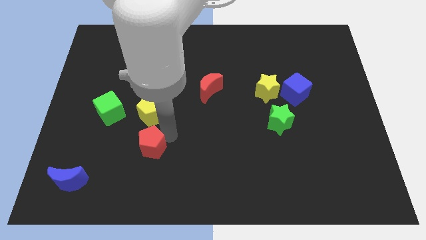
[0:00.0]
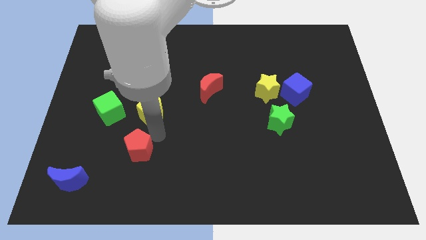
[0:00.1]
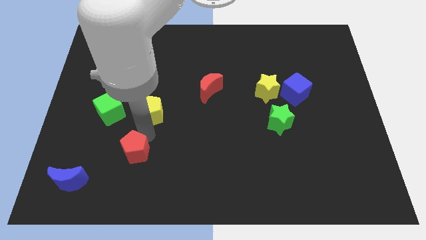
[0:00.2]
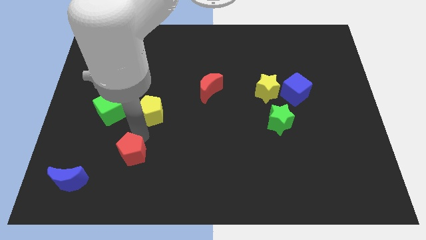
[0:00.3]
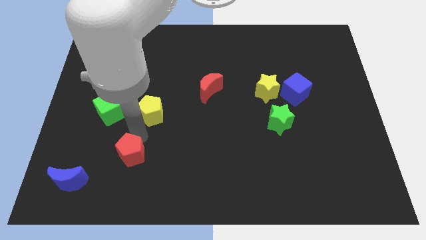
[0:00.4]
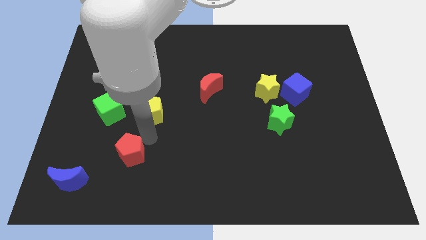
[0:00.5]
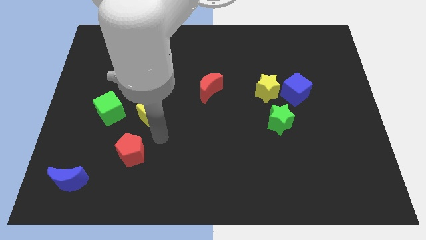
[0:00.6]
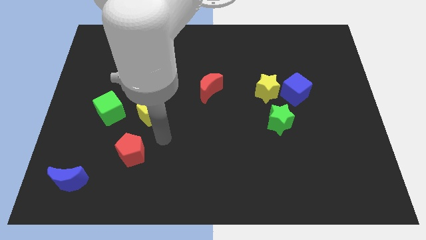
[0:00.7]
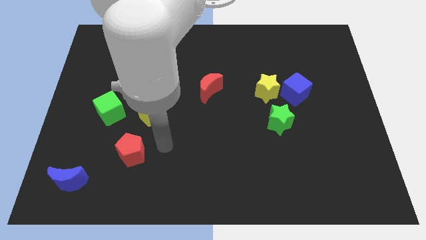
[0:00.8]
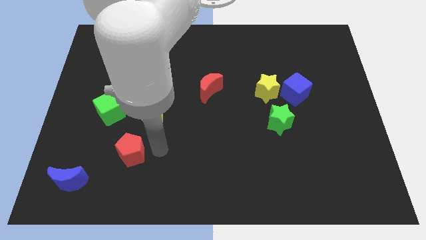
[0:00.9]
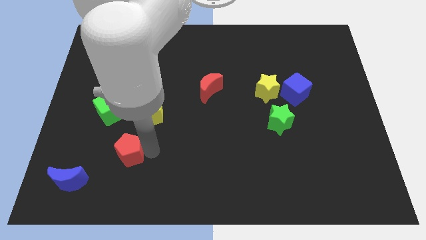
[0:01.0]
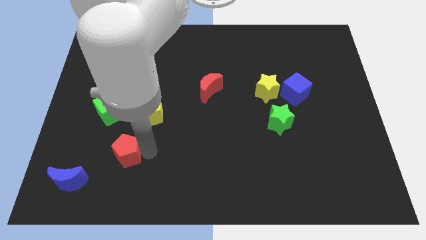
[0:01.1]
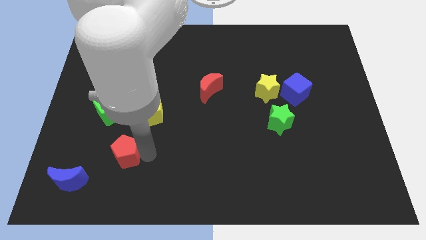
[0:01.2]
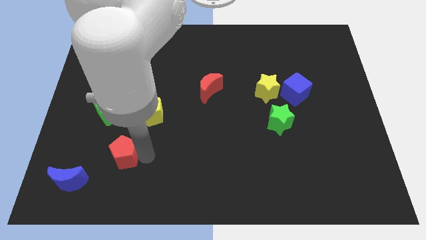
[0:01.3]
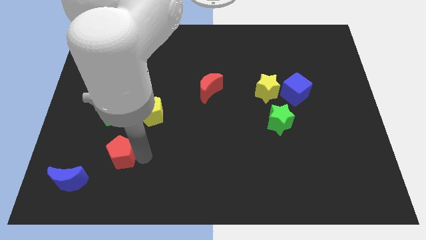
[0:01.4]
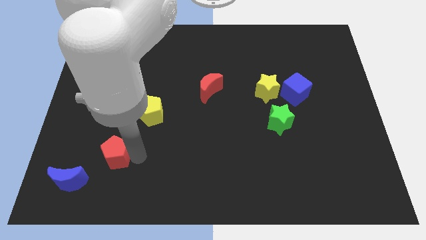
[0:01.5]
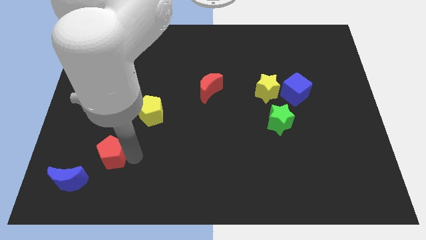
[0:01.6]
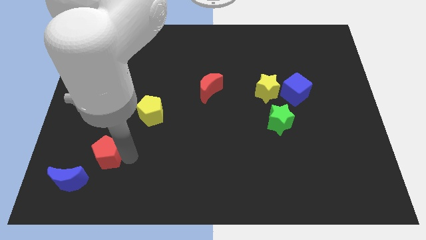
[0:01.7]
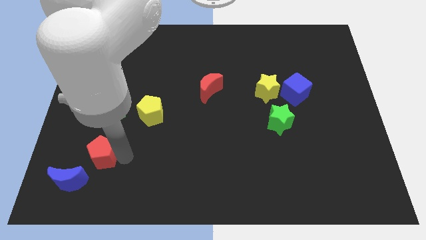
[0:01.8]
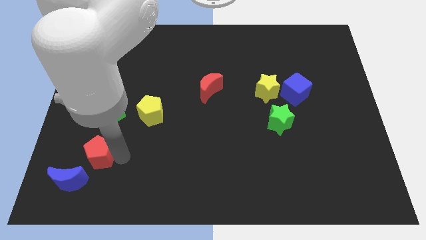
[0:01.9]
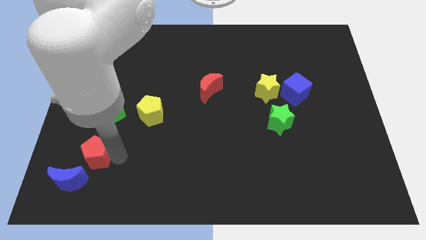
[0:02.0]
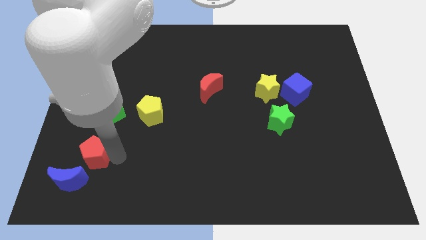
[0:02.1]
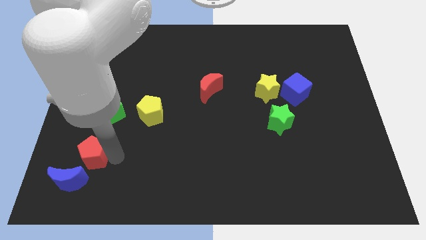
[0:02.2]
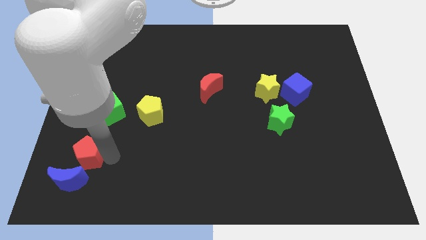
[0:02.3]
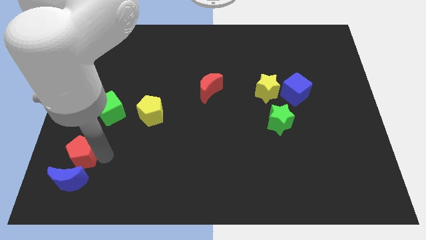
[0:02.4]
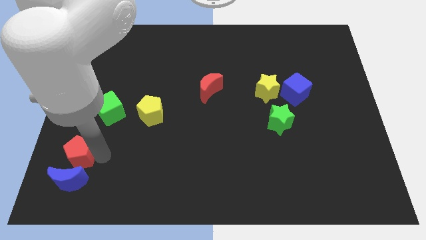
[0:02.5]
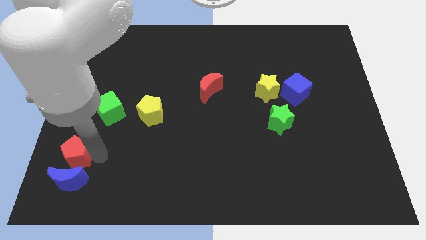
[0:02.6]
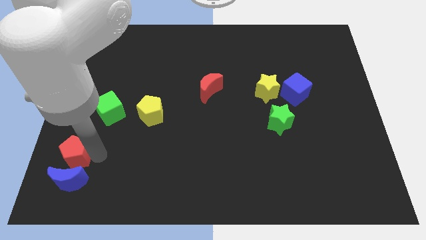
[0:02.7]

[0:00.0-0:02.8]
push the red pentagon to the top of the blue crescent

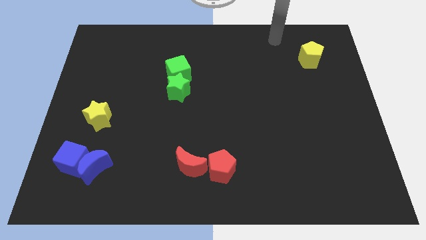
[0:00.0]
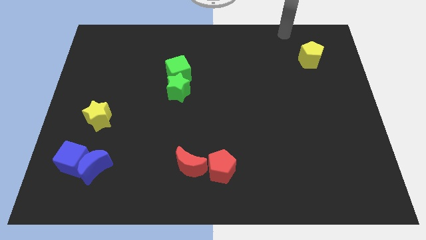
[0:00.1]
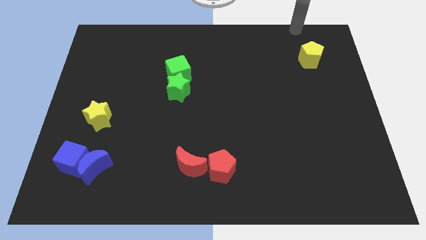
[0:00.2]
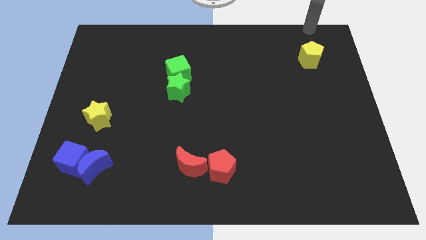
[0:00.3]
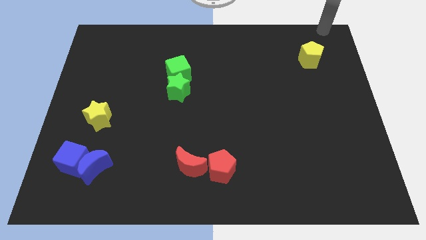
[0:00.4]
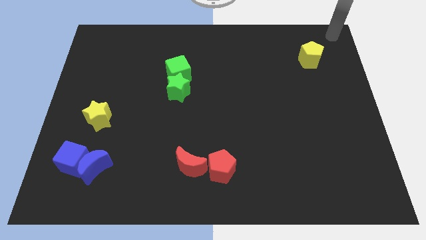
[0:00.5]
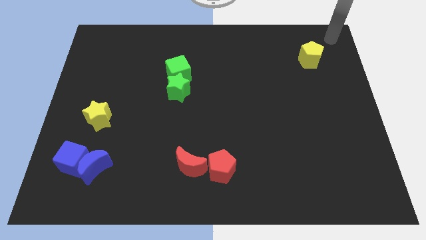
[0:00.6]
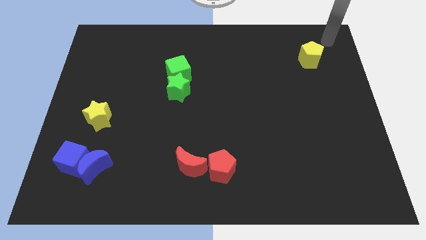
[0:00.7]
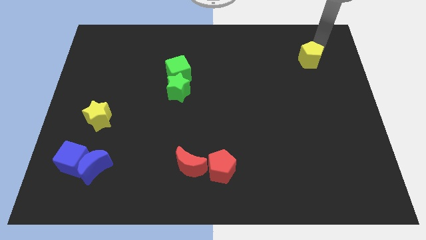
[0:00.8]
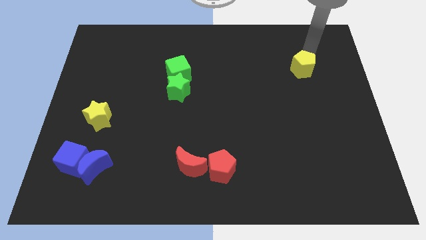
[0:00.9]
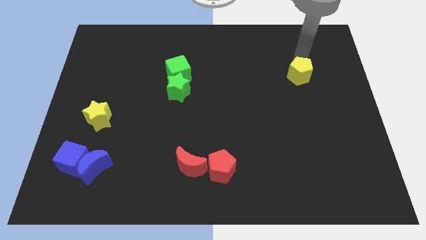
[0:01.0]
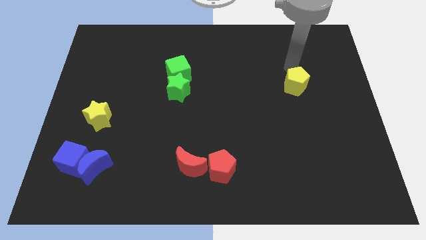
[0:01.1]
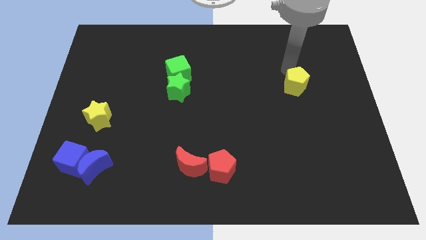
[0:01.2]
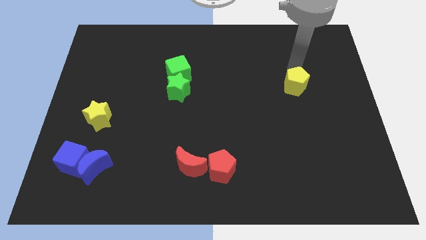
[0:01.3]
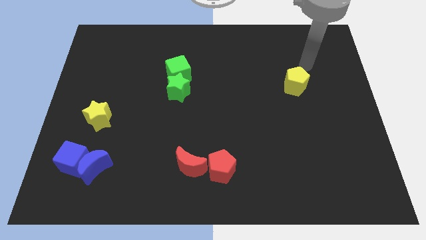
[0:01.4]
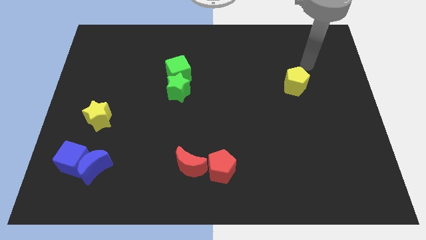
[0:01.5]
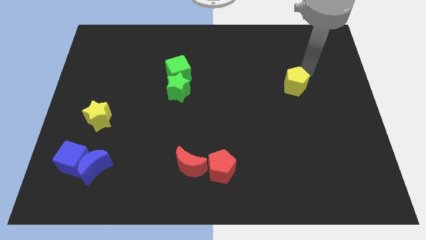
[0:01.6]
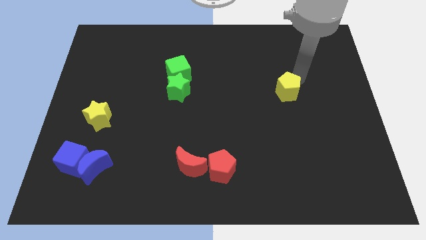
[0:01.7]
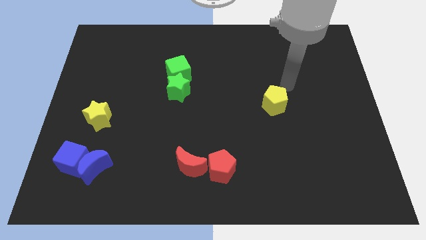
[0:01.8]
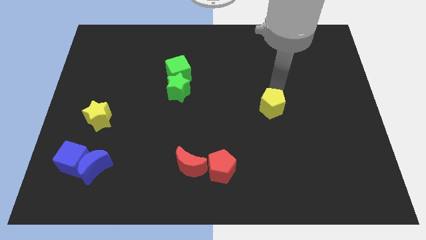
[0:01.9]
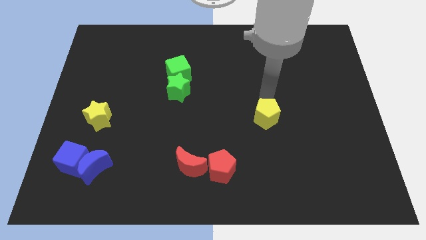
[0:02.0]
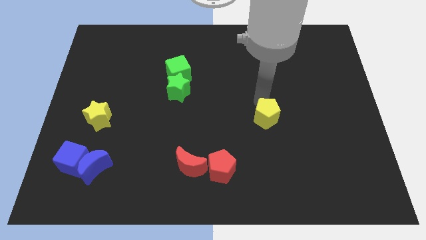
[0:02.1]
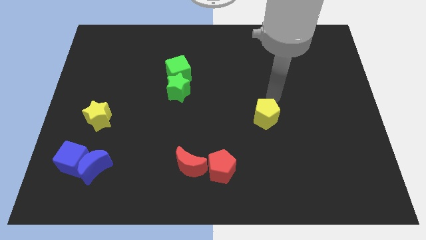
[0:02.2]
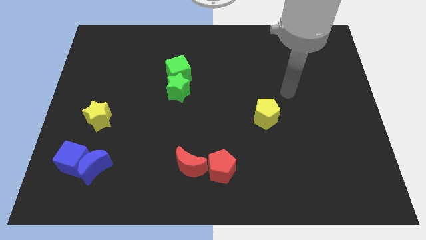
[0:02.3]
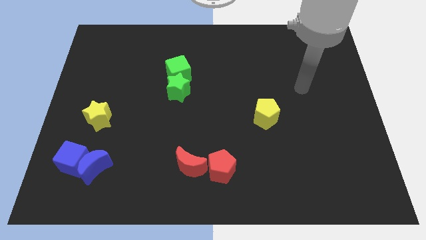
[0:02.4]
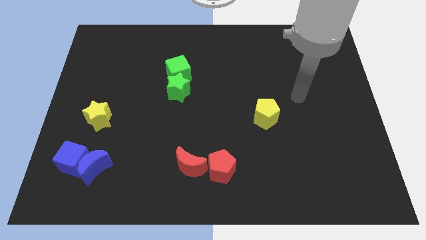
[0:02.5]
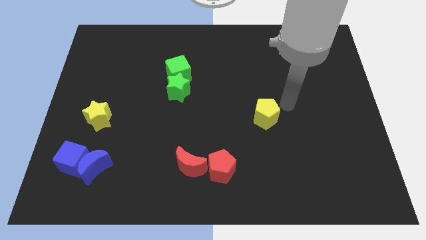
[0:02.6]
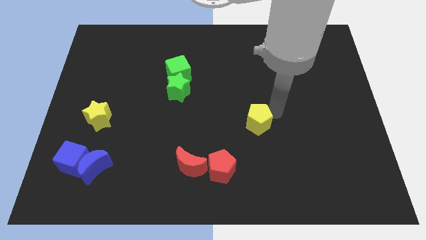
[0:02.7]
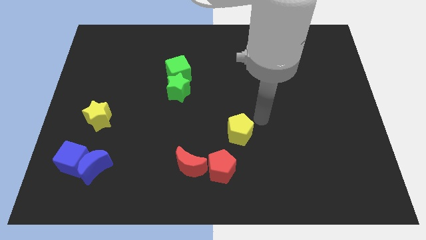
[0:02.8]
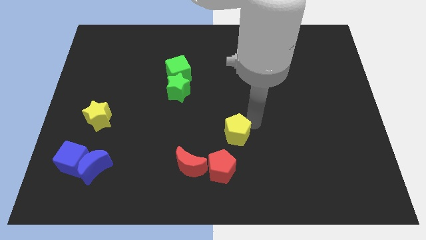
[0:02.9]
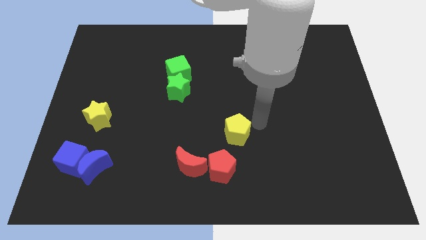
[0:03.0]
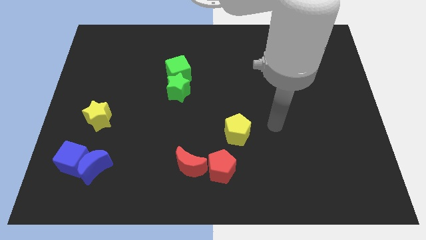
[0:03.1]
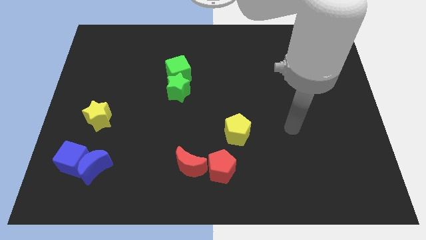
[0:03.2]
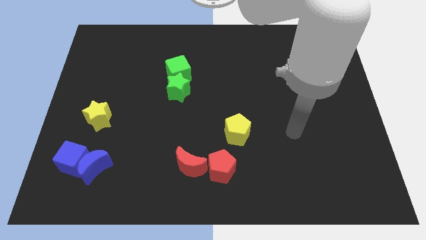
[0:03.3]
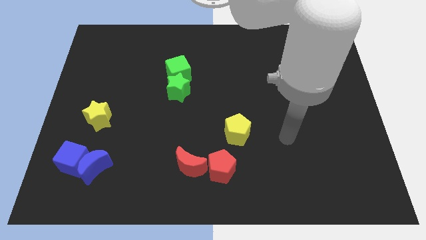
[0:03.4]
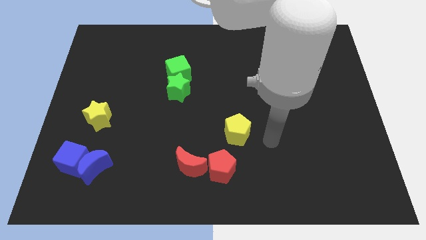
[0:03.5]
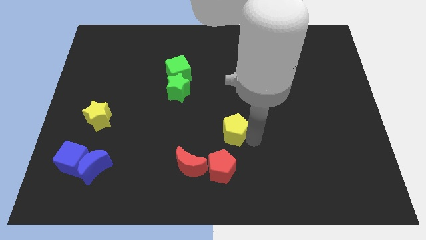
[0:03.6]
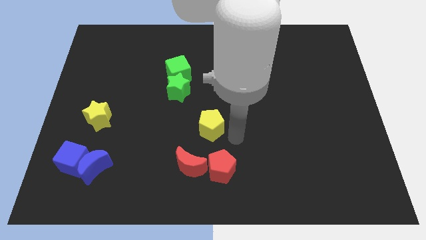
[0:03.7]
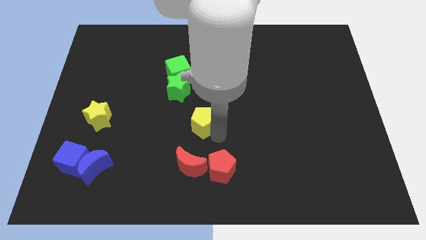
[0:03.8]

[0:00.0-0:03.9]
slide the yellow pentagon to left above the red pentagon

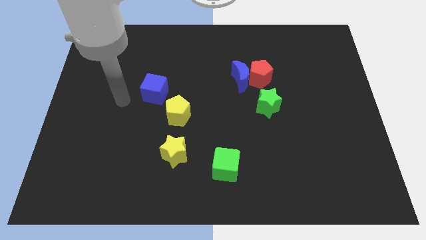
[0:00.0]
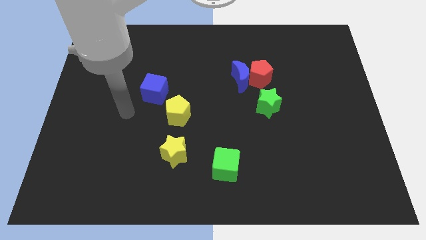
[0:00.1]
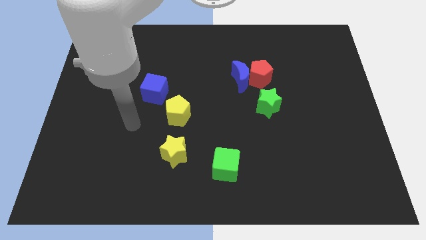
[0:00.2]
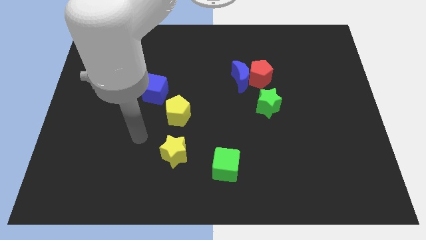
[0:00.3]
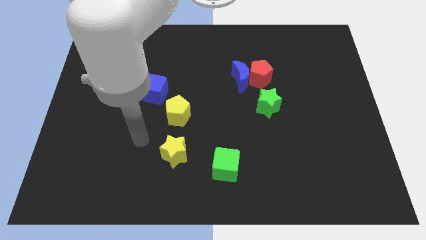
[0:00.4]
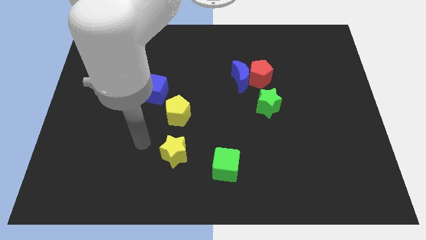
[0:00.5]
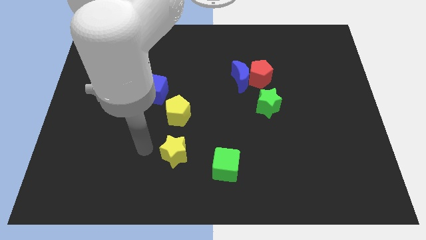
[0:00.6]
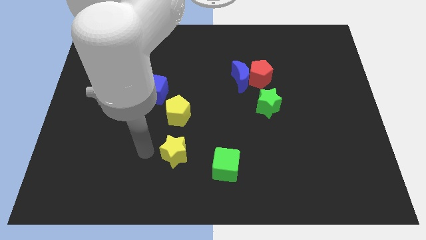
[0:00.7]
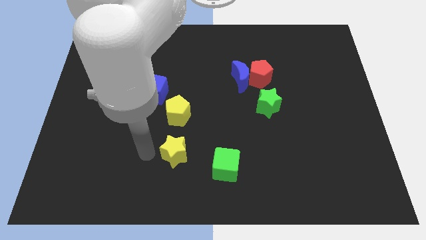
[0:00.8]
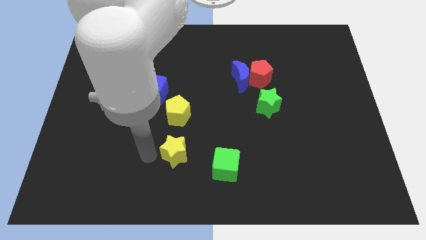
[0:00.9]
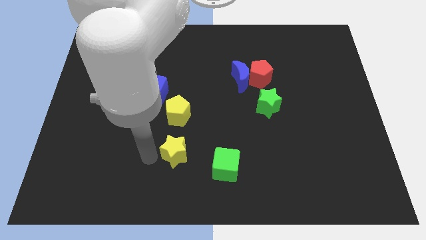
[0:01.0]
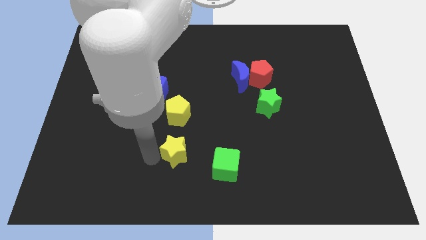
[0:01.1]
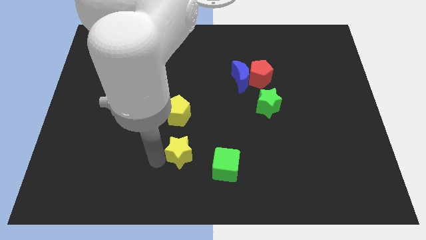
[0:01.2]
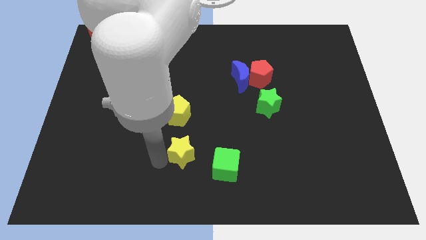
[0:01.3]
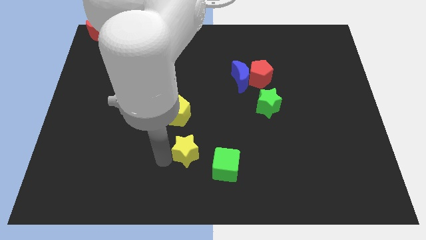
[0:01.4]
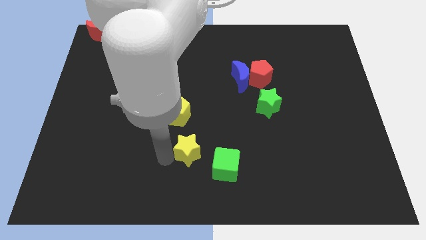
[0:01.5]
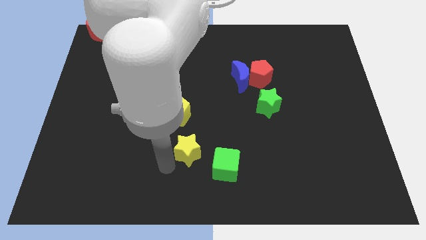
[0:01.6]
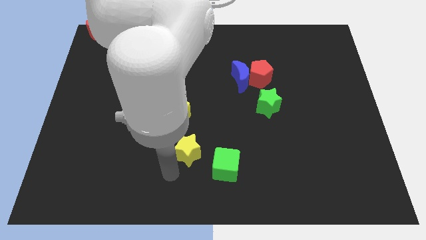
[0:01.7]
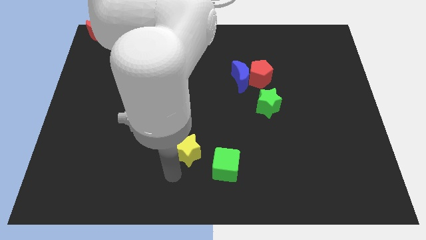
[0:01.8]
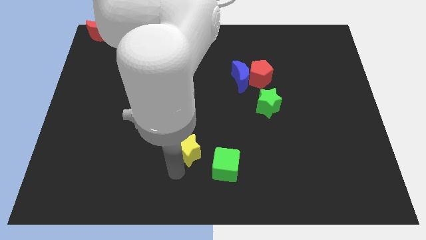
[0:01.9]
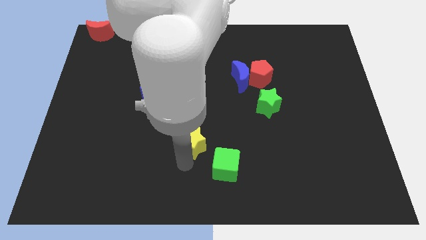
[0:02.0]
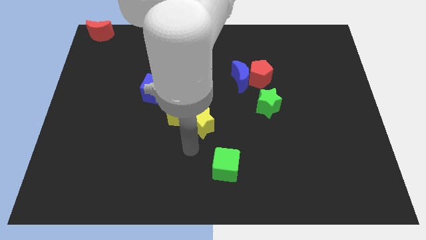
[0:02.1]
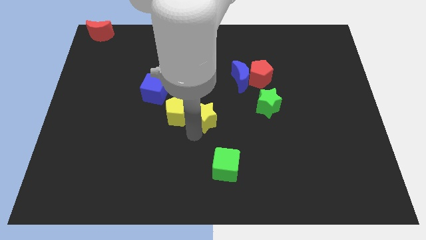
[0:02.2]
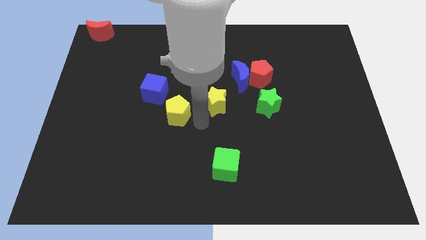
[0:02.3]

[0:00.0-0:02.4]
push the yellow star to the right of the yellow pentagon
